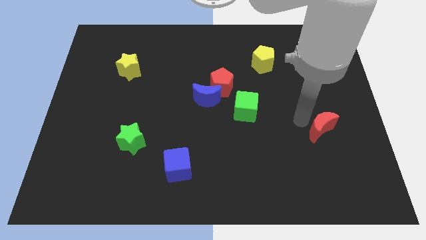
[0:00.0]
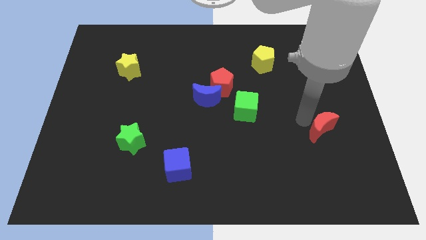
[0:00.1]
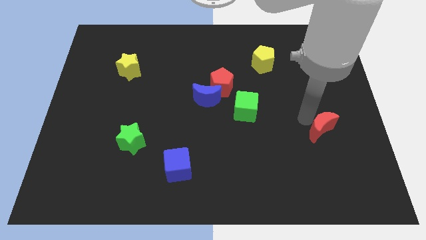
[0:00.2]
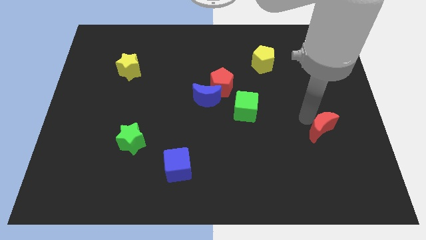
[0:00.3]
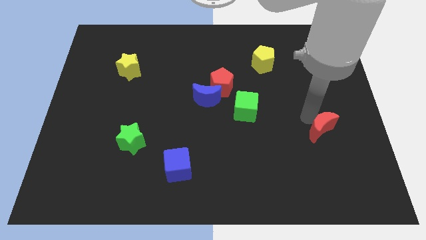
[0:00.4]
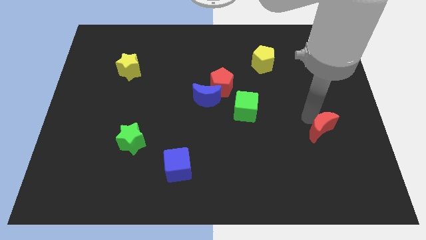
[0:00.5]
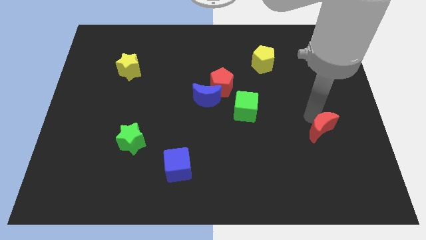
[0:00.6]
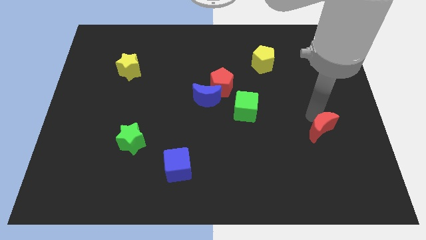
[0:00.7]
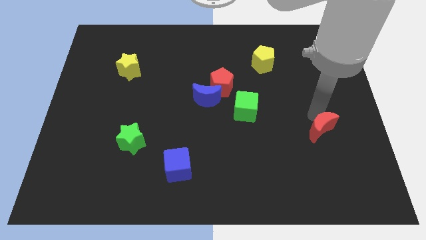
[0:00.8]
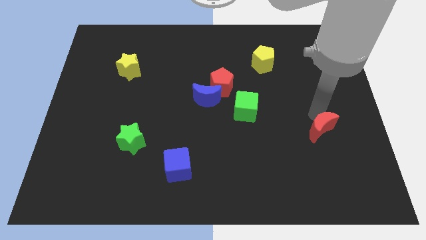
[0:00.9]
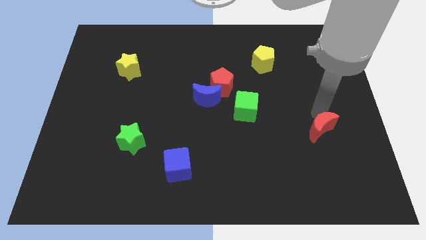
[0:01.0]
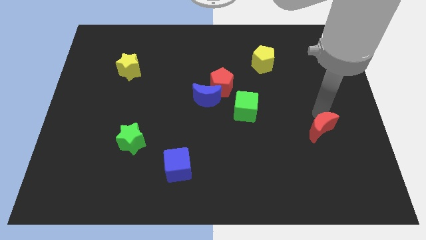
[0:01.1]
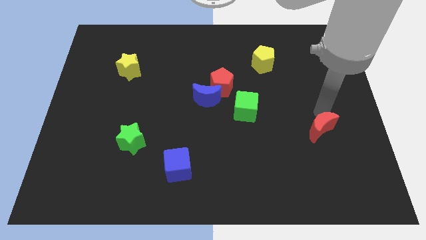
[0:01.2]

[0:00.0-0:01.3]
touch the top side of the red moon

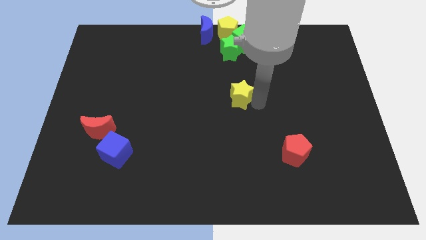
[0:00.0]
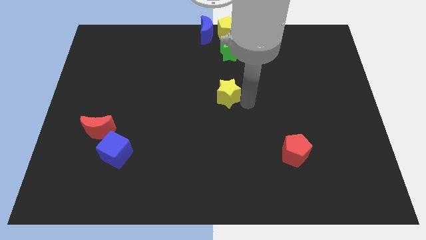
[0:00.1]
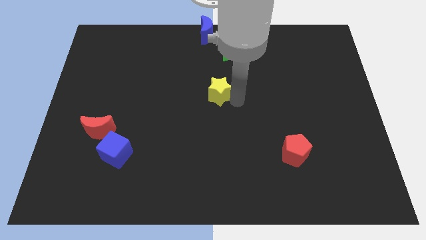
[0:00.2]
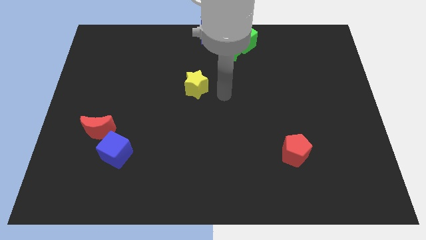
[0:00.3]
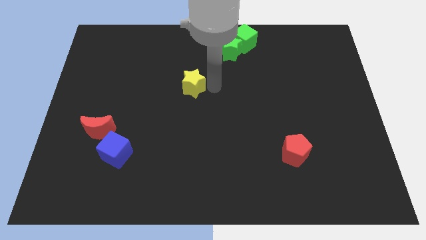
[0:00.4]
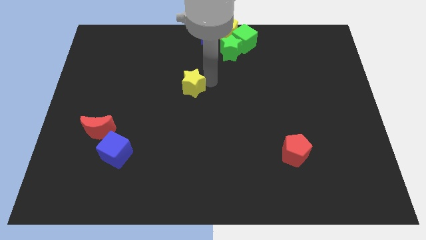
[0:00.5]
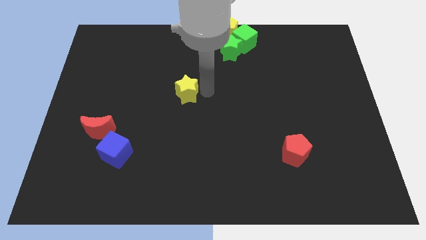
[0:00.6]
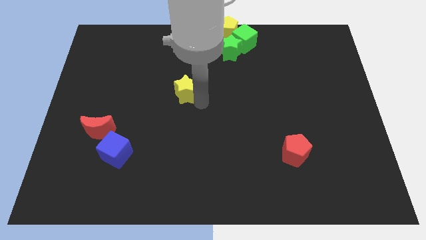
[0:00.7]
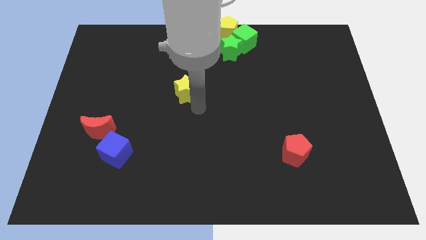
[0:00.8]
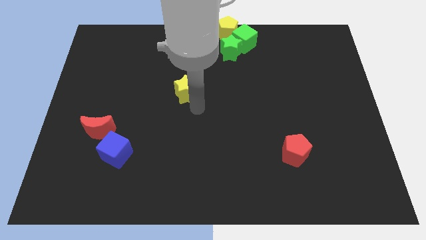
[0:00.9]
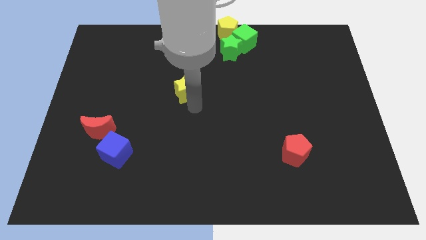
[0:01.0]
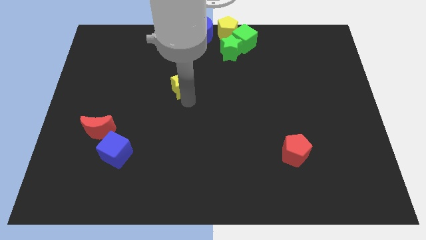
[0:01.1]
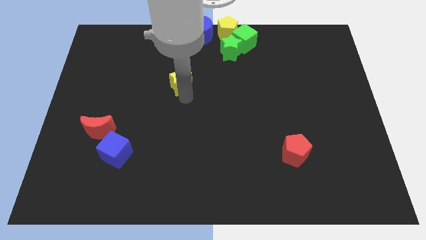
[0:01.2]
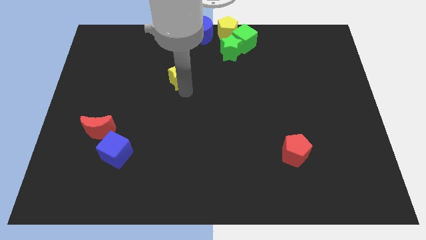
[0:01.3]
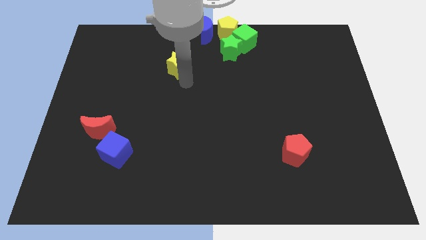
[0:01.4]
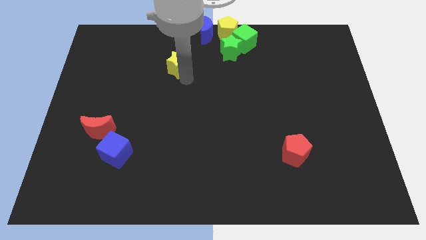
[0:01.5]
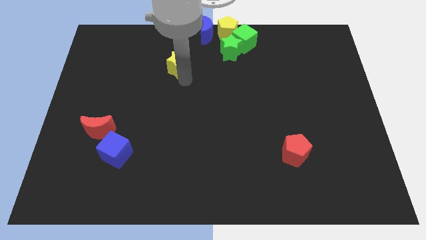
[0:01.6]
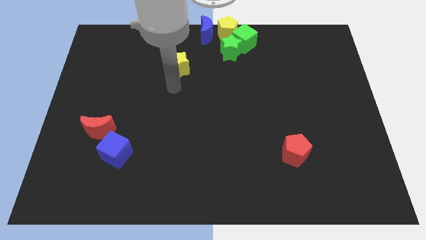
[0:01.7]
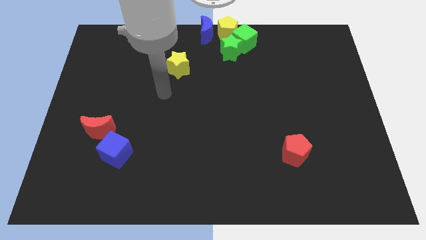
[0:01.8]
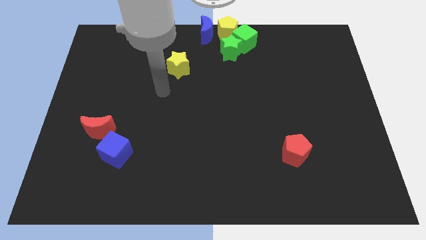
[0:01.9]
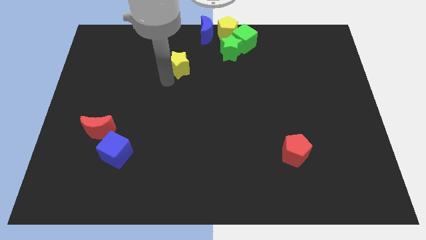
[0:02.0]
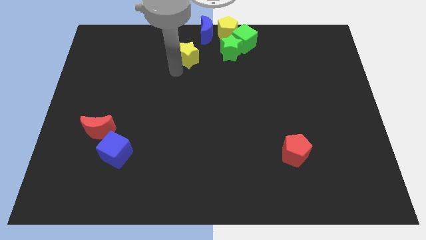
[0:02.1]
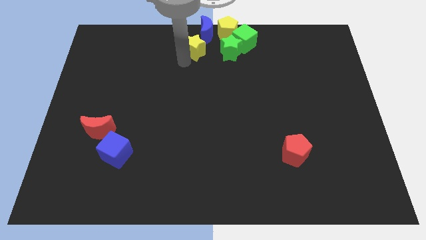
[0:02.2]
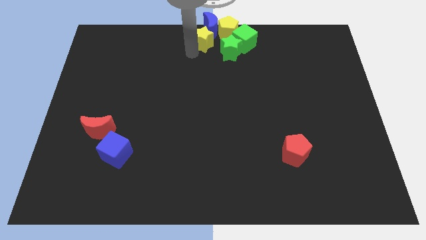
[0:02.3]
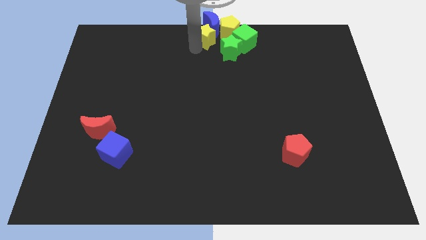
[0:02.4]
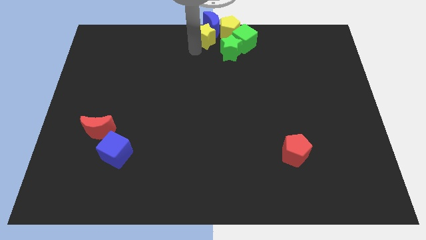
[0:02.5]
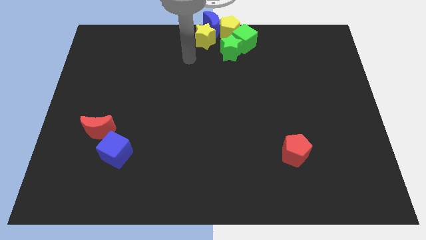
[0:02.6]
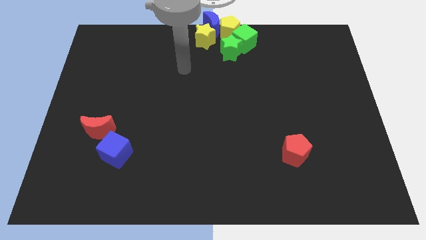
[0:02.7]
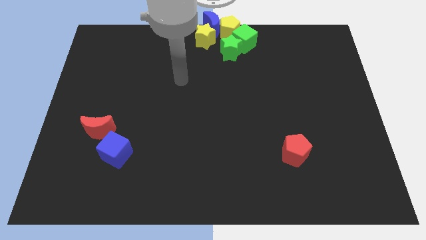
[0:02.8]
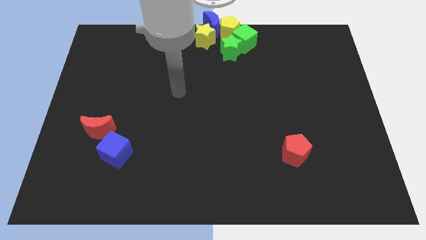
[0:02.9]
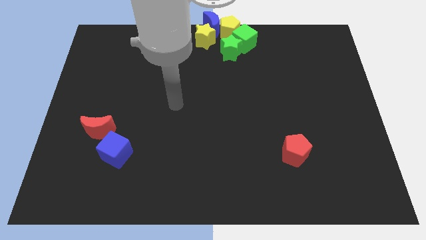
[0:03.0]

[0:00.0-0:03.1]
push yellow star in to blue moon

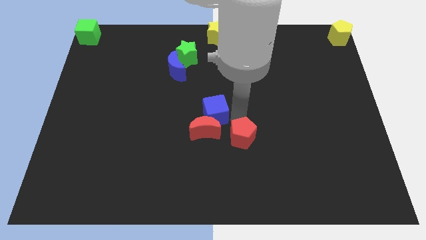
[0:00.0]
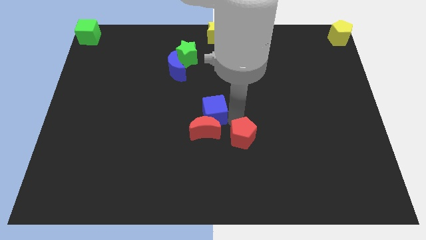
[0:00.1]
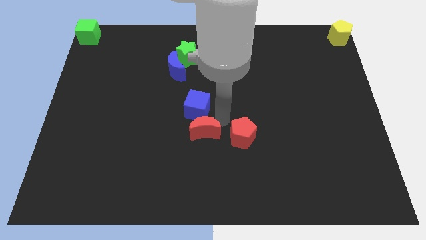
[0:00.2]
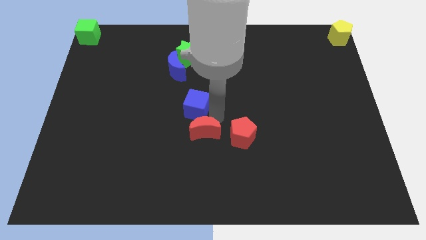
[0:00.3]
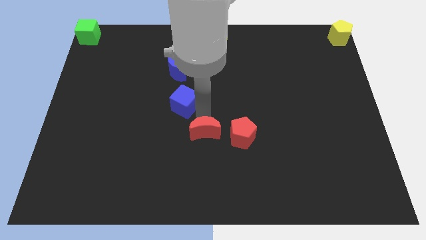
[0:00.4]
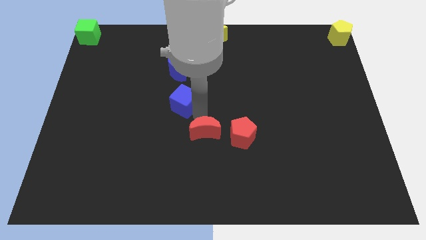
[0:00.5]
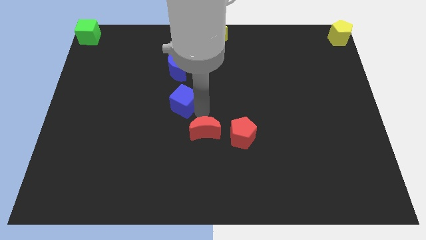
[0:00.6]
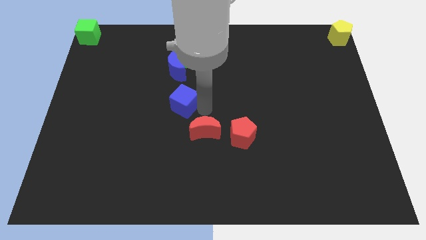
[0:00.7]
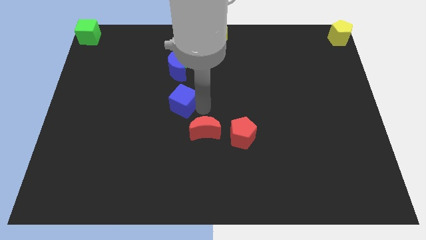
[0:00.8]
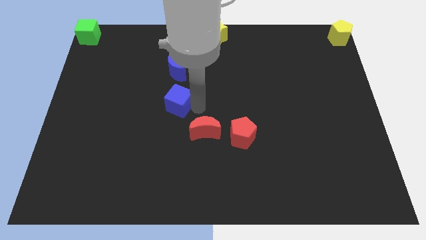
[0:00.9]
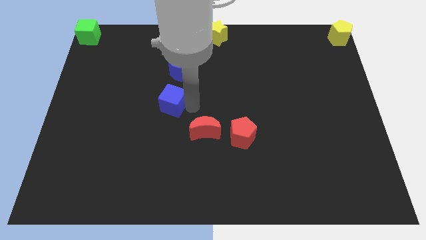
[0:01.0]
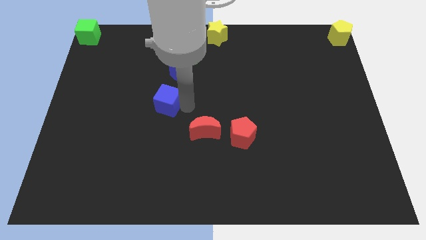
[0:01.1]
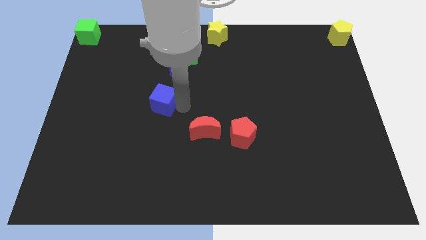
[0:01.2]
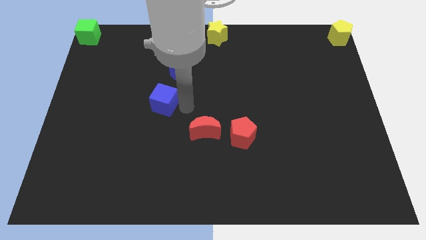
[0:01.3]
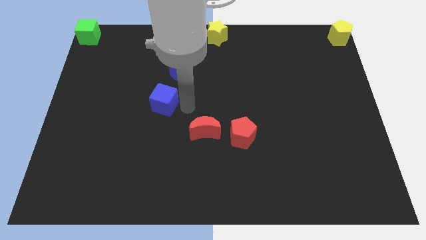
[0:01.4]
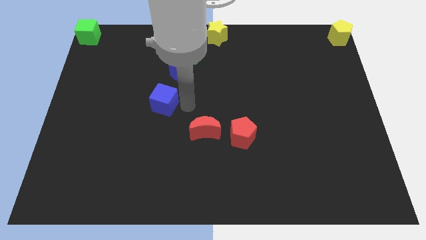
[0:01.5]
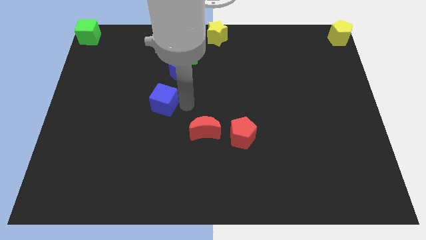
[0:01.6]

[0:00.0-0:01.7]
separate blue club from red moon

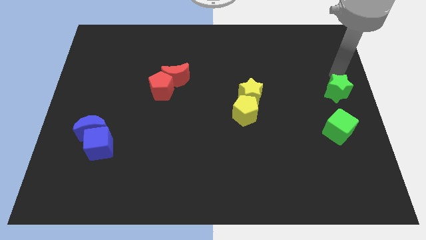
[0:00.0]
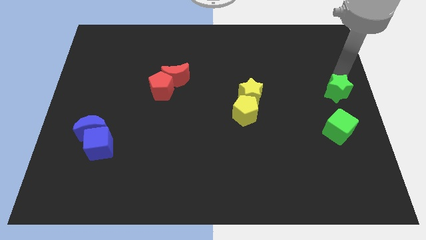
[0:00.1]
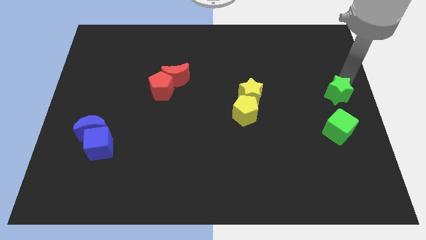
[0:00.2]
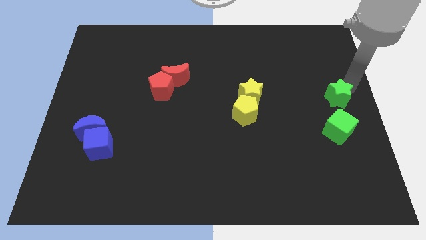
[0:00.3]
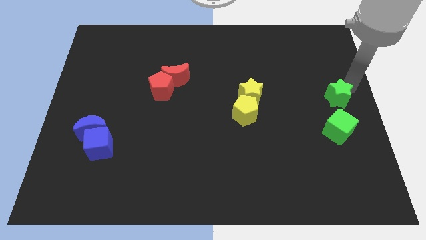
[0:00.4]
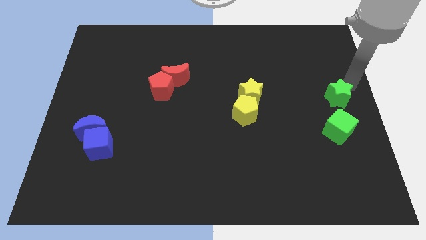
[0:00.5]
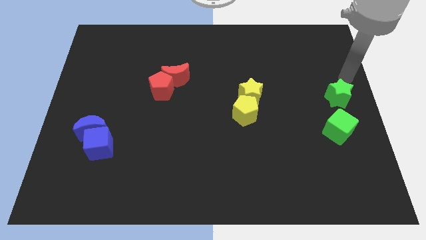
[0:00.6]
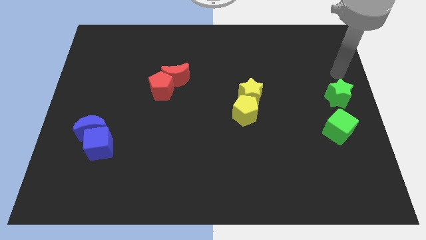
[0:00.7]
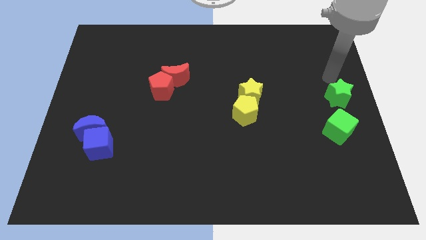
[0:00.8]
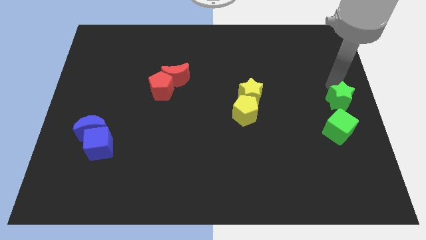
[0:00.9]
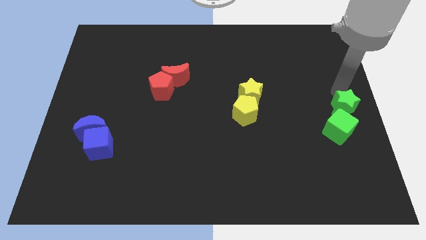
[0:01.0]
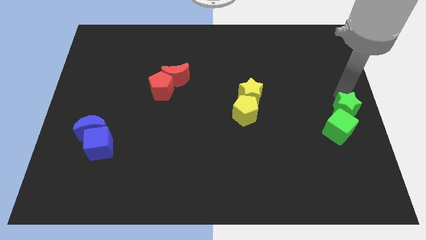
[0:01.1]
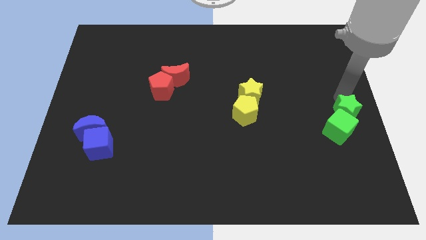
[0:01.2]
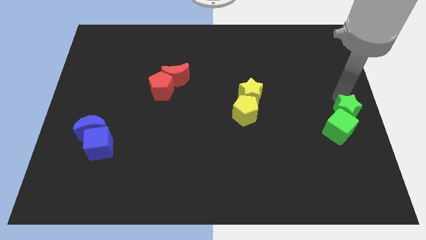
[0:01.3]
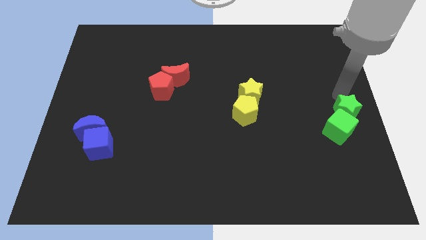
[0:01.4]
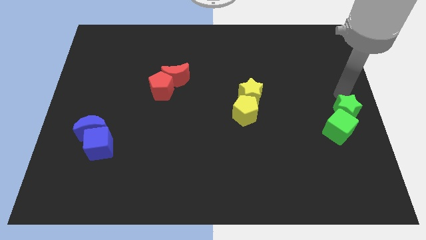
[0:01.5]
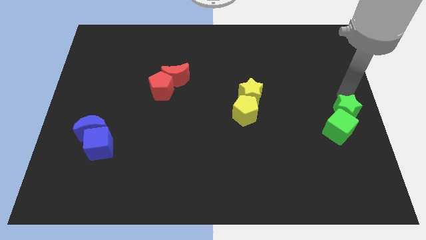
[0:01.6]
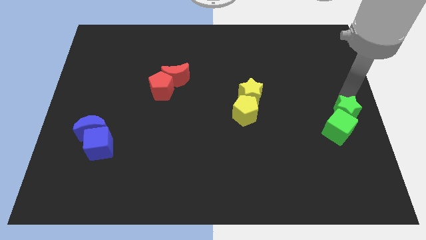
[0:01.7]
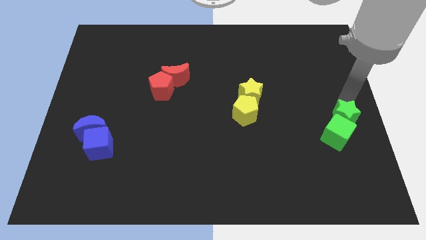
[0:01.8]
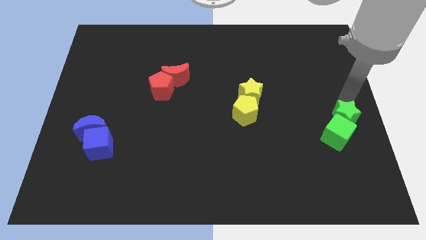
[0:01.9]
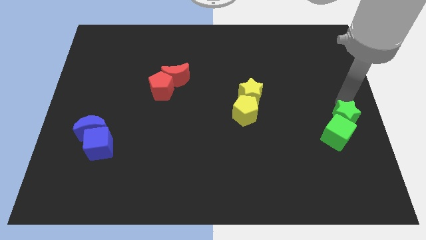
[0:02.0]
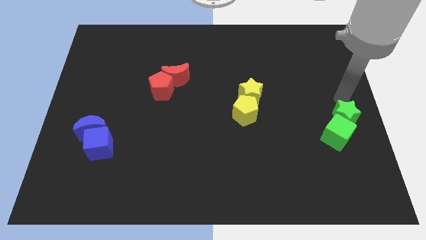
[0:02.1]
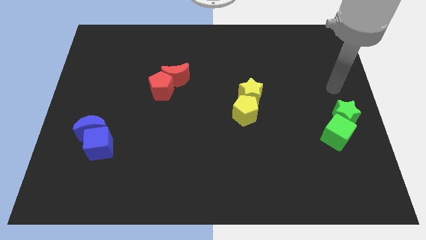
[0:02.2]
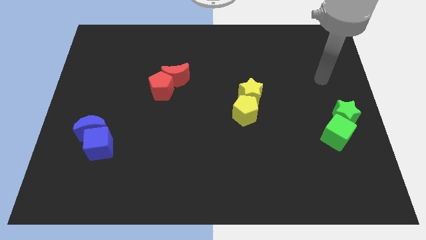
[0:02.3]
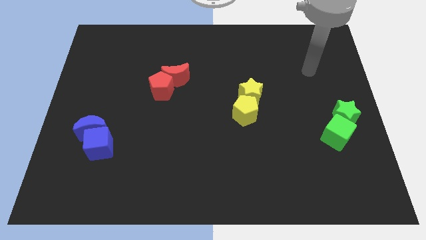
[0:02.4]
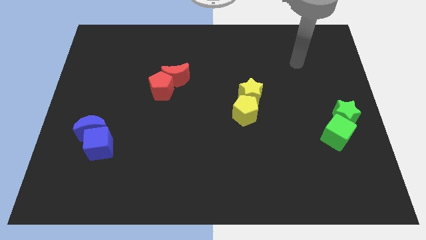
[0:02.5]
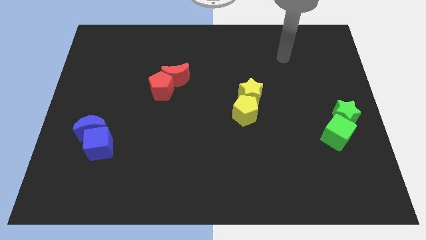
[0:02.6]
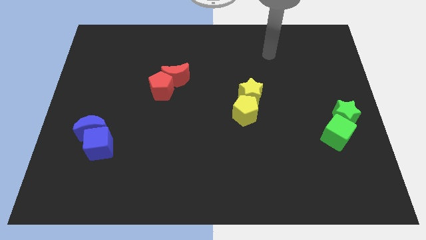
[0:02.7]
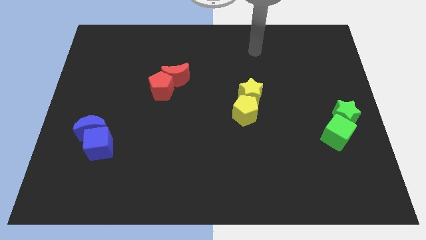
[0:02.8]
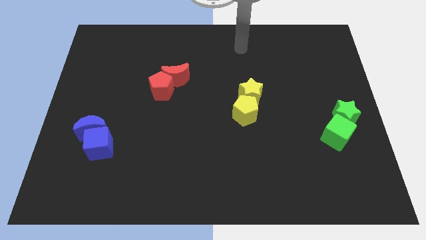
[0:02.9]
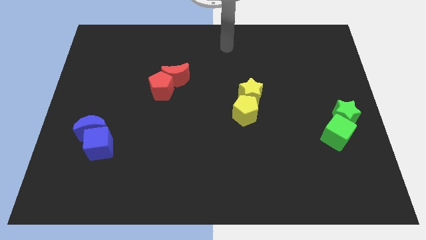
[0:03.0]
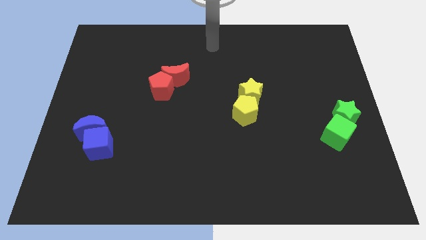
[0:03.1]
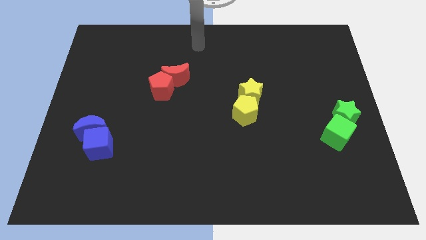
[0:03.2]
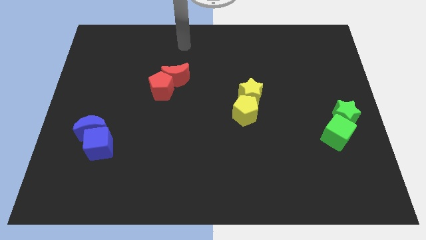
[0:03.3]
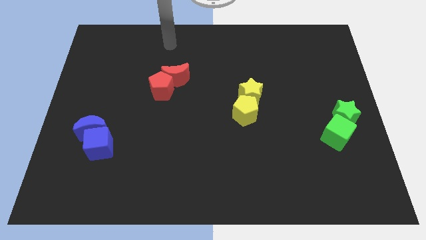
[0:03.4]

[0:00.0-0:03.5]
move your arm away from the green star
